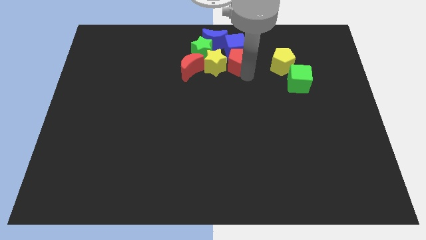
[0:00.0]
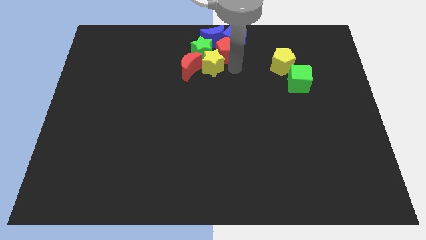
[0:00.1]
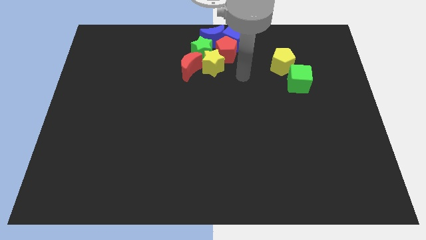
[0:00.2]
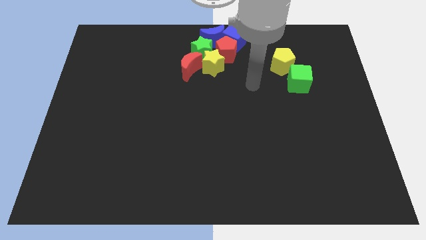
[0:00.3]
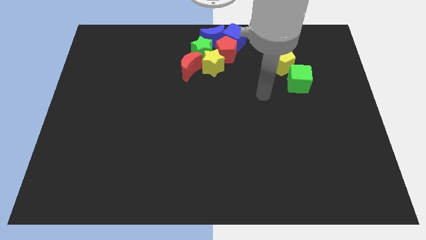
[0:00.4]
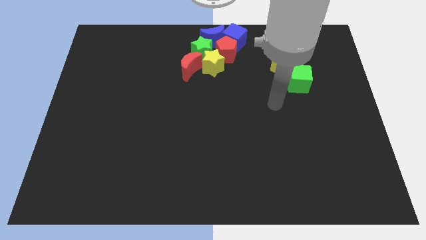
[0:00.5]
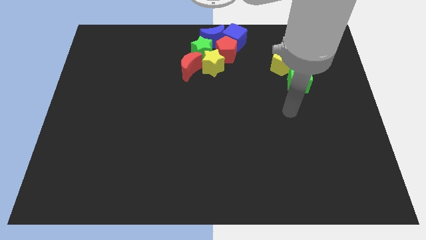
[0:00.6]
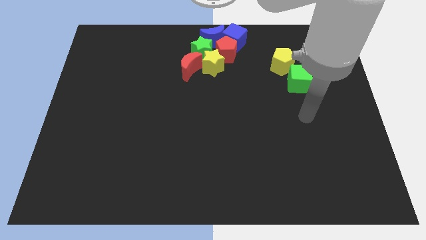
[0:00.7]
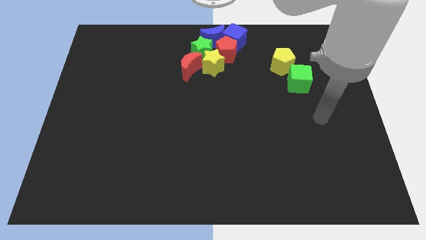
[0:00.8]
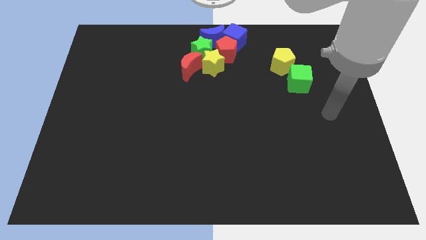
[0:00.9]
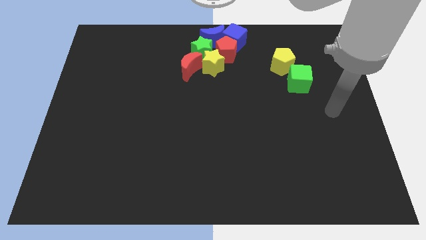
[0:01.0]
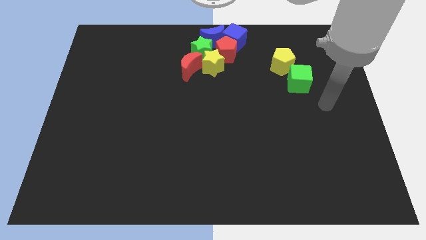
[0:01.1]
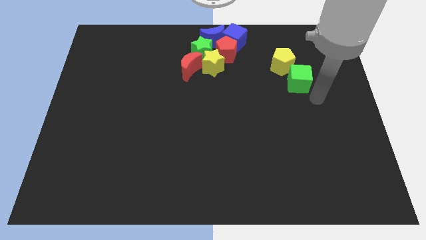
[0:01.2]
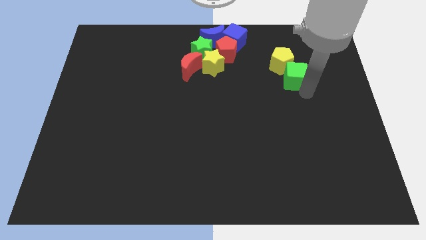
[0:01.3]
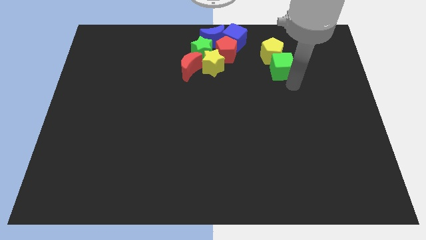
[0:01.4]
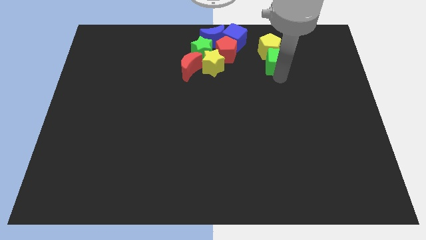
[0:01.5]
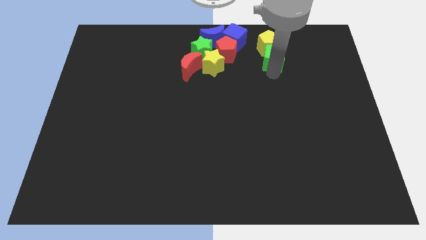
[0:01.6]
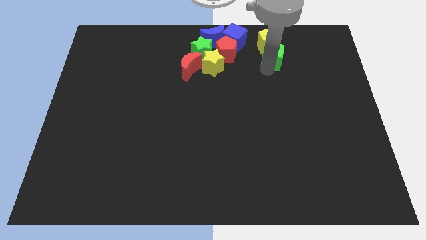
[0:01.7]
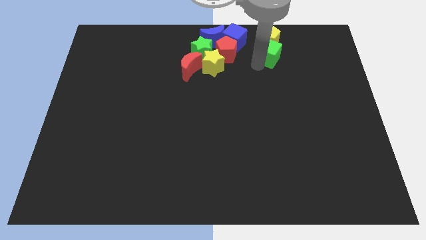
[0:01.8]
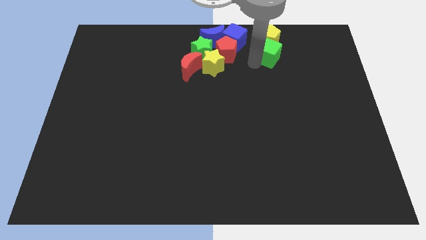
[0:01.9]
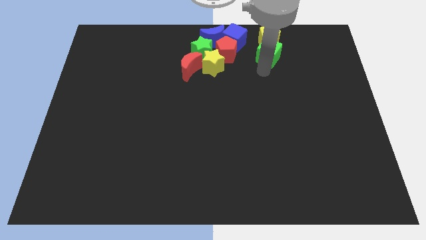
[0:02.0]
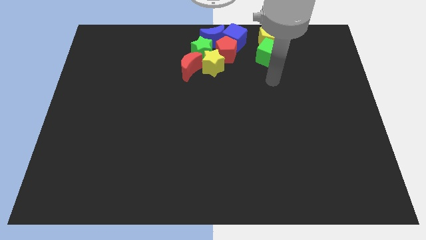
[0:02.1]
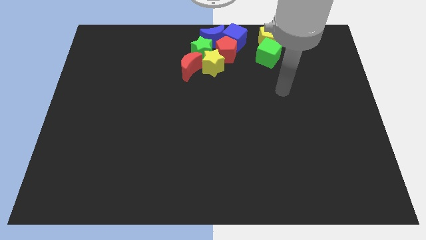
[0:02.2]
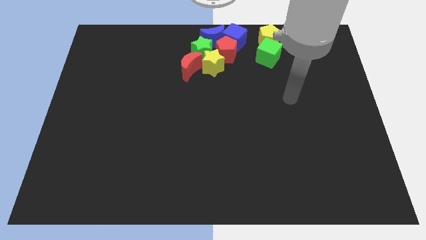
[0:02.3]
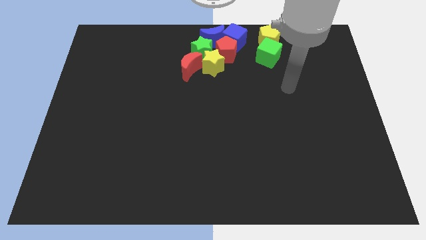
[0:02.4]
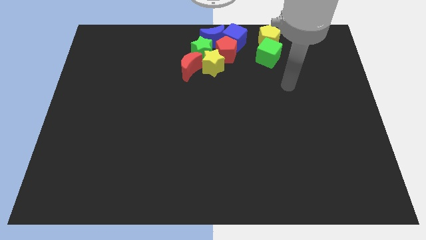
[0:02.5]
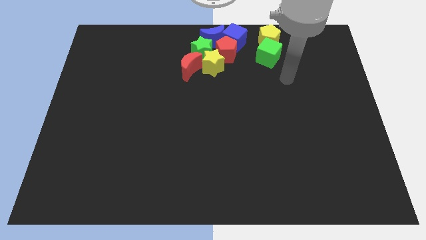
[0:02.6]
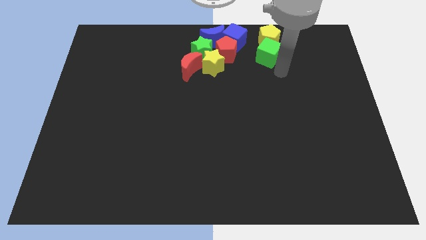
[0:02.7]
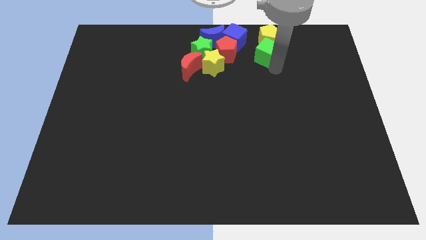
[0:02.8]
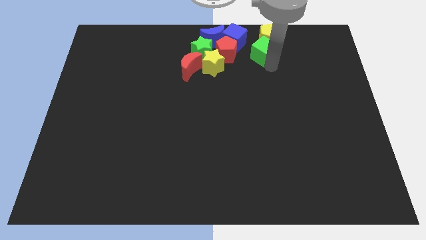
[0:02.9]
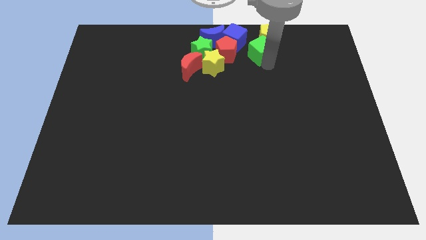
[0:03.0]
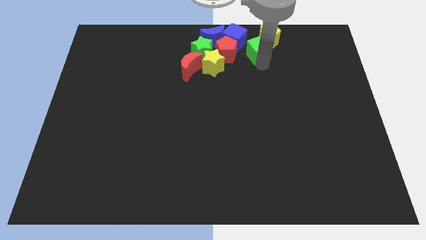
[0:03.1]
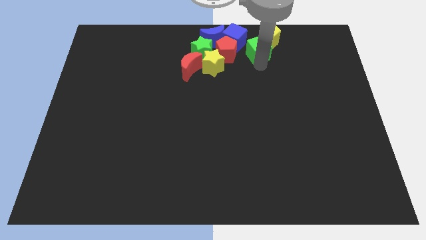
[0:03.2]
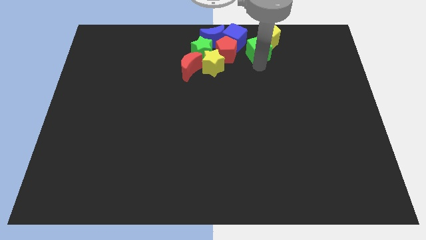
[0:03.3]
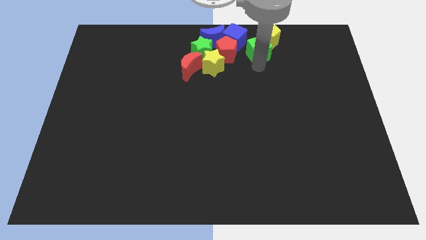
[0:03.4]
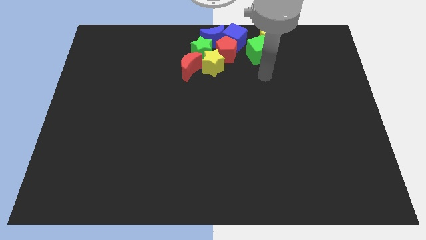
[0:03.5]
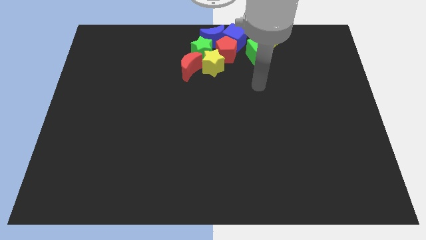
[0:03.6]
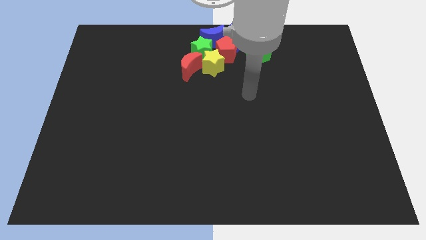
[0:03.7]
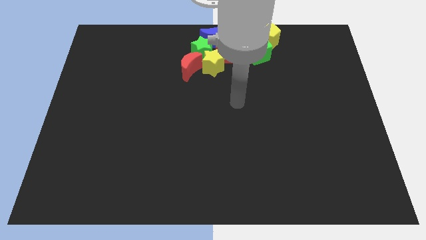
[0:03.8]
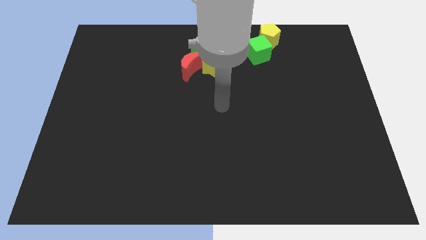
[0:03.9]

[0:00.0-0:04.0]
move the green cube and yellow pentagon to the right side of the group of blocks

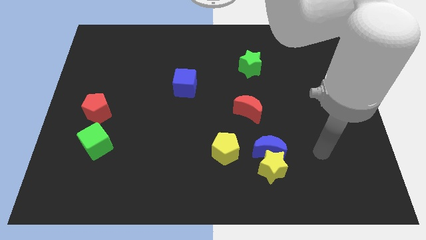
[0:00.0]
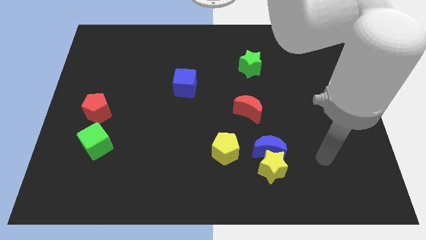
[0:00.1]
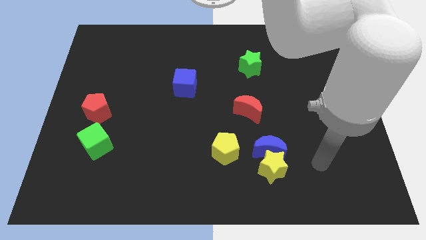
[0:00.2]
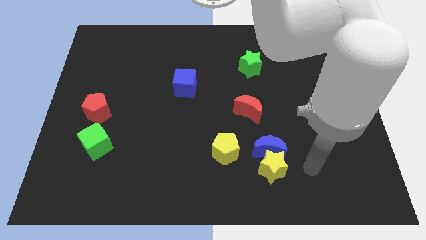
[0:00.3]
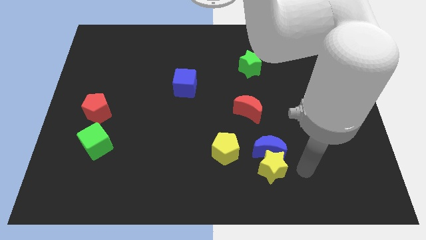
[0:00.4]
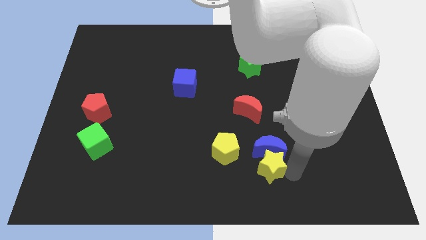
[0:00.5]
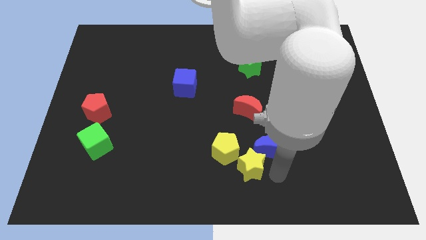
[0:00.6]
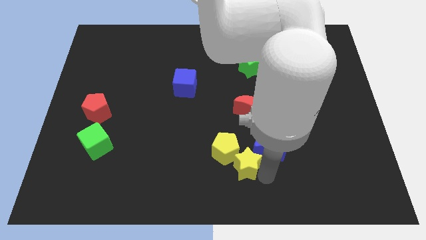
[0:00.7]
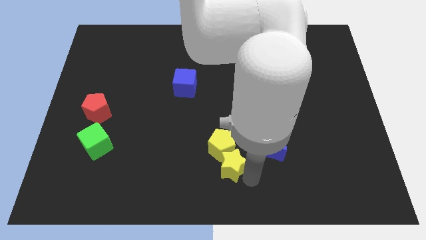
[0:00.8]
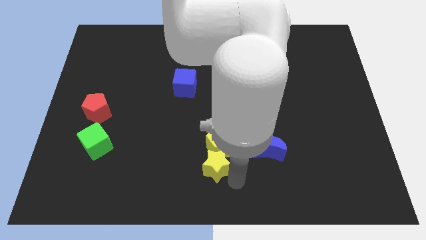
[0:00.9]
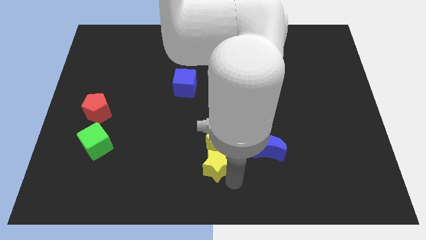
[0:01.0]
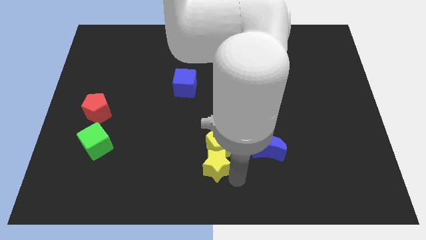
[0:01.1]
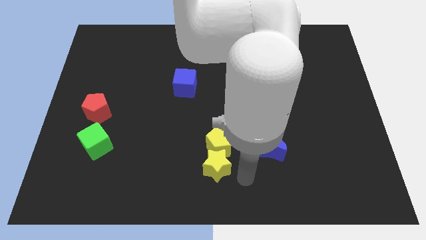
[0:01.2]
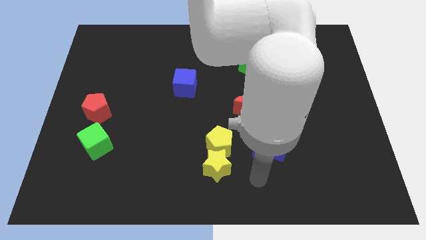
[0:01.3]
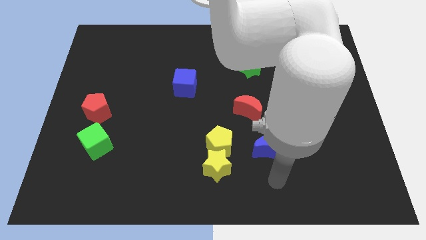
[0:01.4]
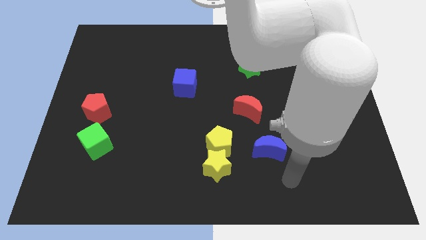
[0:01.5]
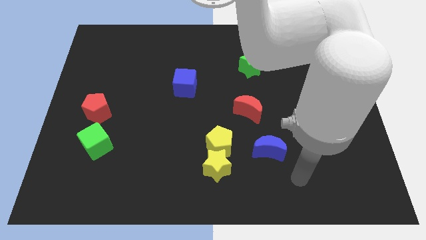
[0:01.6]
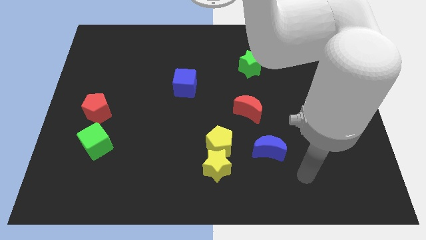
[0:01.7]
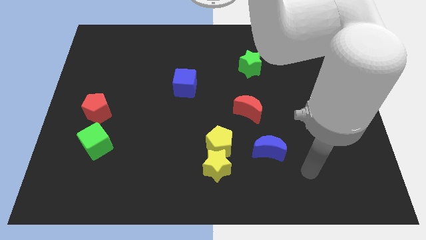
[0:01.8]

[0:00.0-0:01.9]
place the yellow star at the bottom of the yellow pentagon

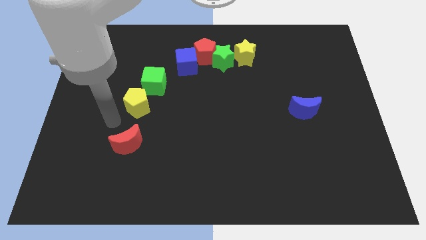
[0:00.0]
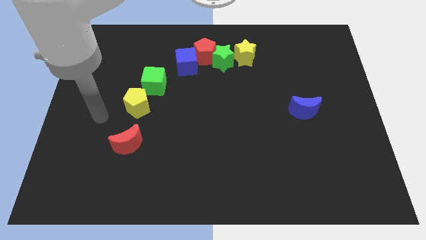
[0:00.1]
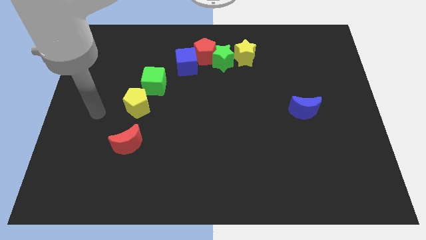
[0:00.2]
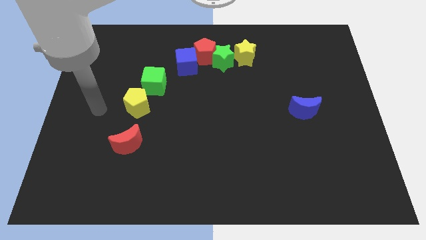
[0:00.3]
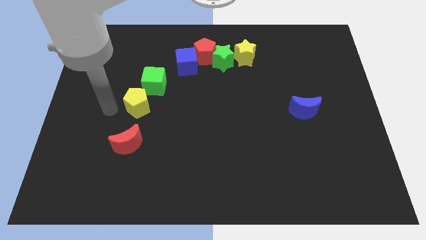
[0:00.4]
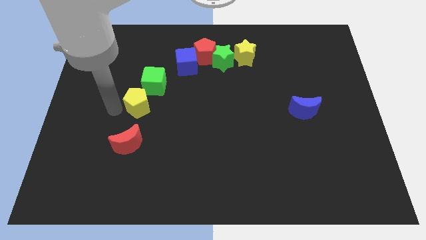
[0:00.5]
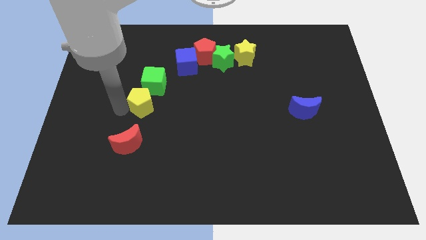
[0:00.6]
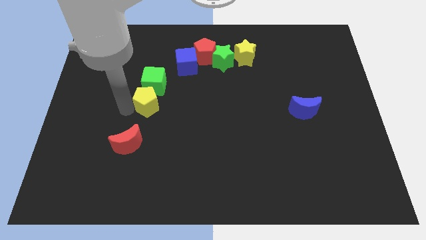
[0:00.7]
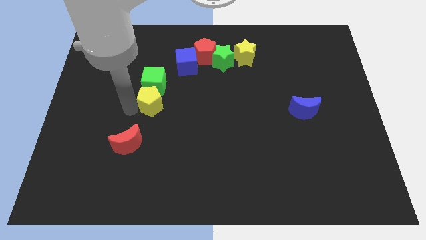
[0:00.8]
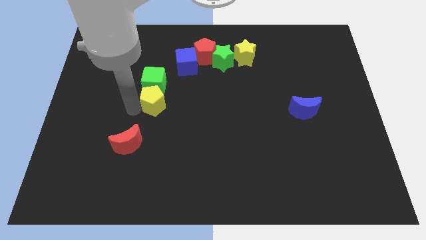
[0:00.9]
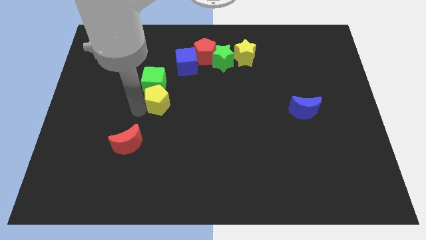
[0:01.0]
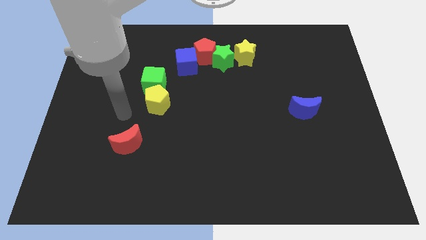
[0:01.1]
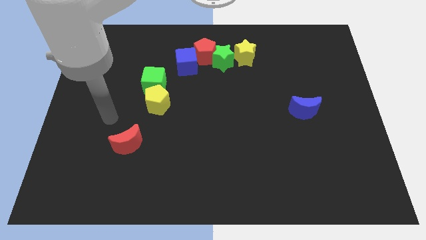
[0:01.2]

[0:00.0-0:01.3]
push the yellow pentagon to the bottom of the green cube

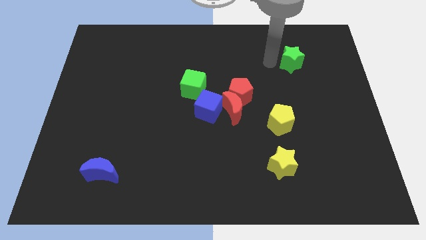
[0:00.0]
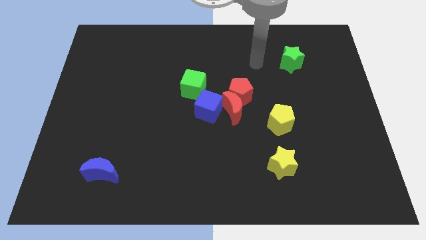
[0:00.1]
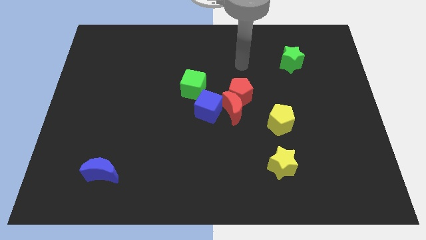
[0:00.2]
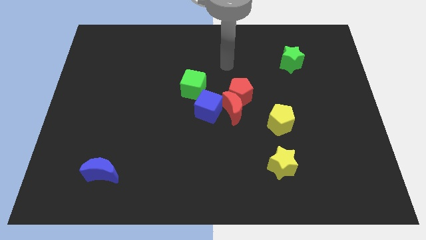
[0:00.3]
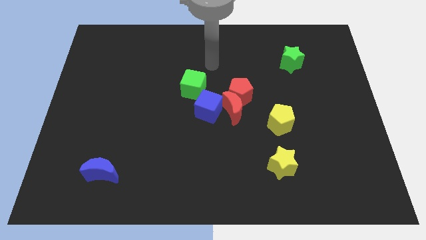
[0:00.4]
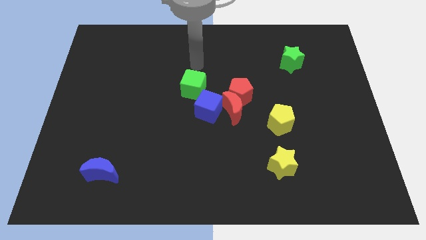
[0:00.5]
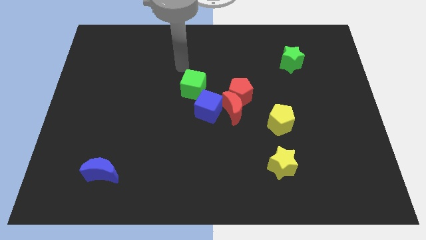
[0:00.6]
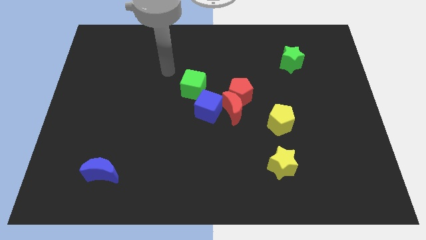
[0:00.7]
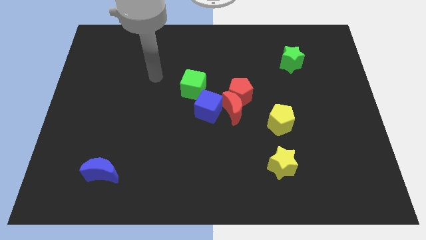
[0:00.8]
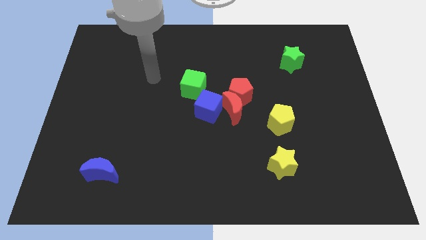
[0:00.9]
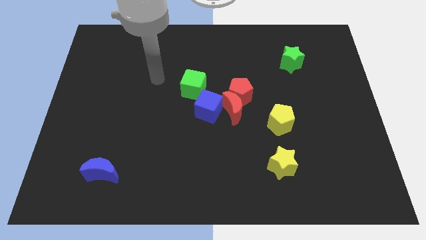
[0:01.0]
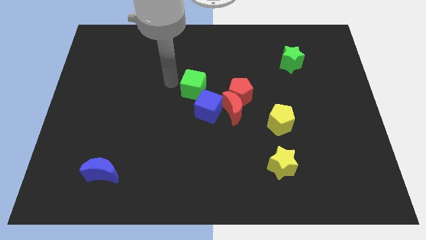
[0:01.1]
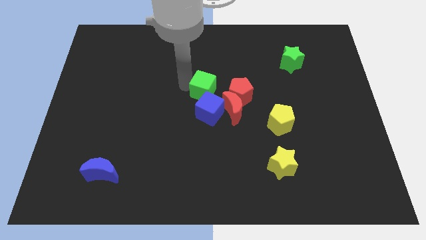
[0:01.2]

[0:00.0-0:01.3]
move your arm towards the green cube

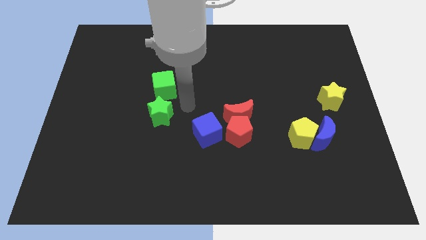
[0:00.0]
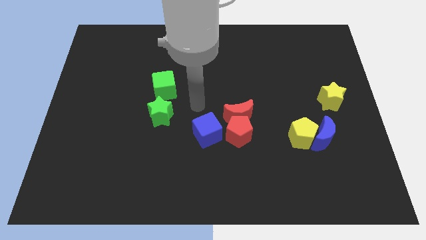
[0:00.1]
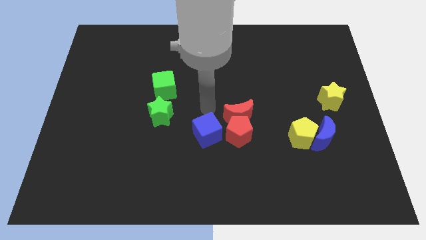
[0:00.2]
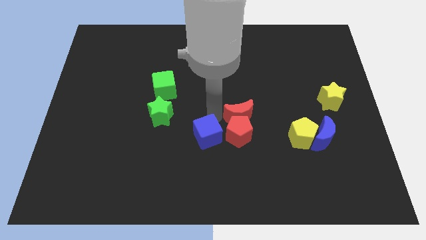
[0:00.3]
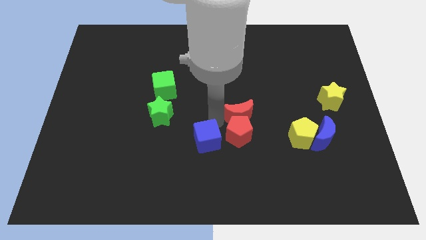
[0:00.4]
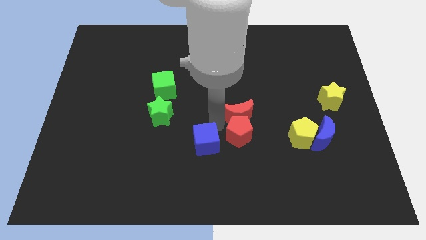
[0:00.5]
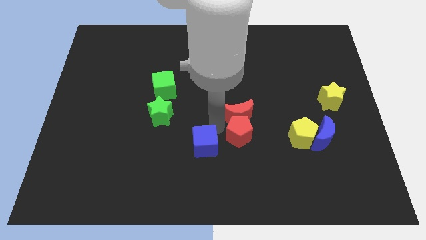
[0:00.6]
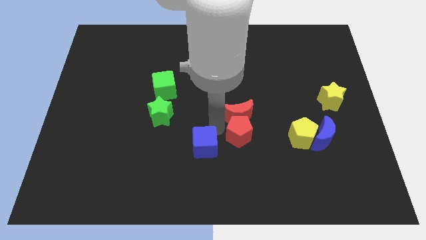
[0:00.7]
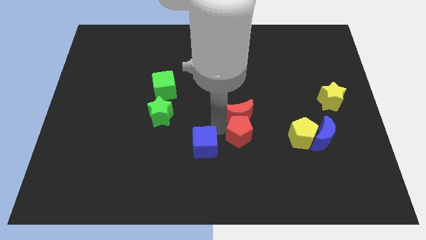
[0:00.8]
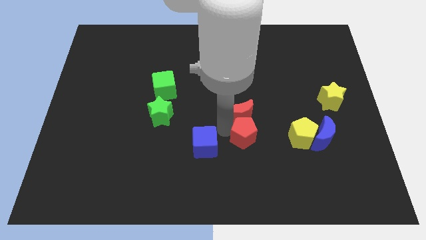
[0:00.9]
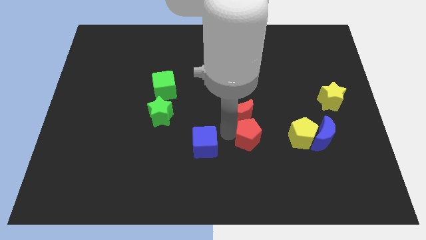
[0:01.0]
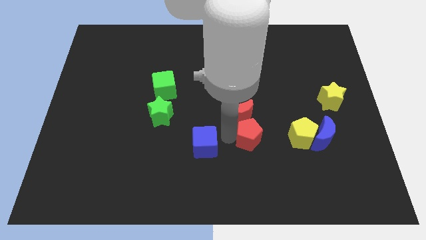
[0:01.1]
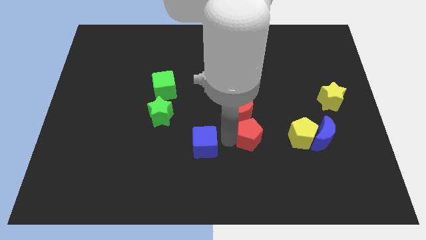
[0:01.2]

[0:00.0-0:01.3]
move the blue cube from the red pentagon towards the left
